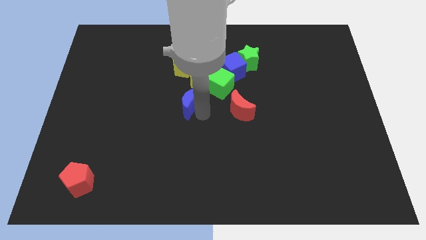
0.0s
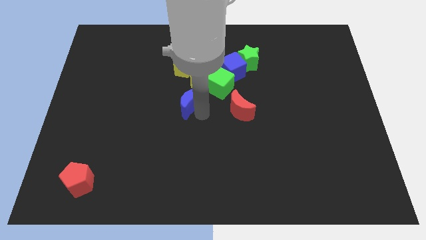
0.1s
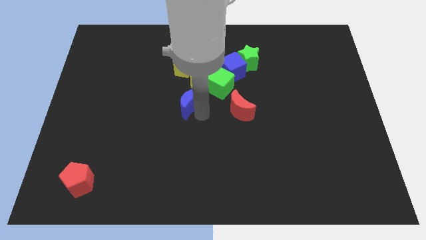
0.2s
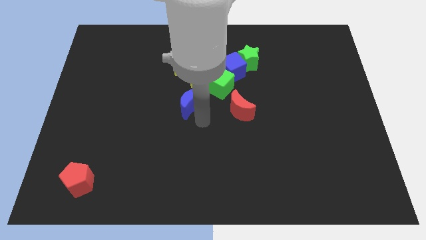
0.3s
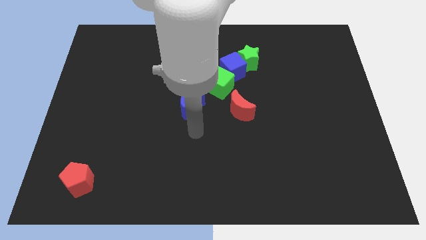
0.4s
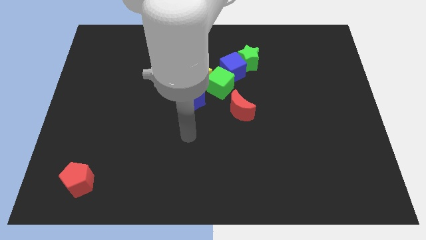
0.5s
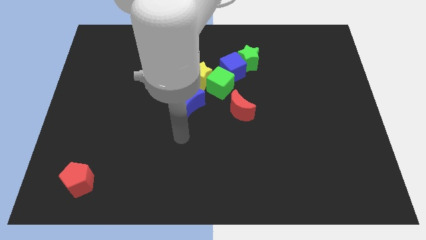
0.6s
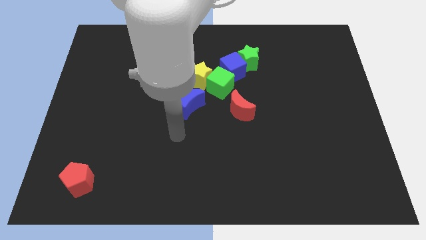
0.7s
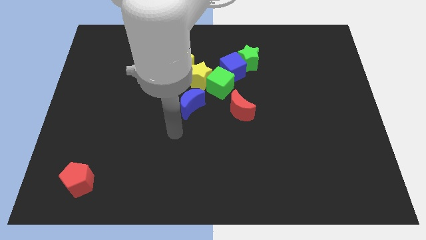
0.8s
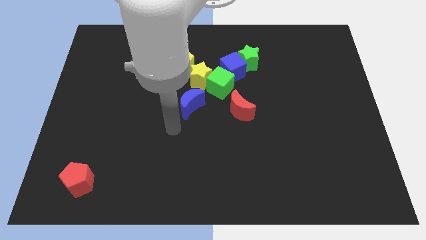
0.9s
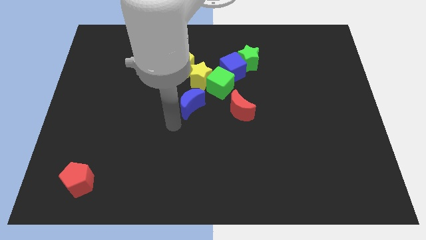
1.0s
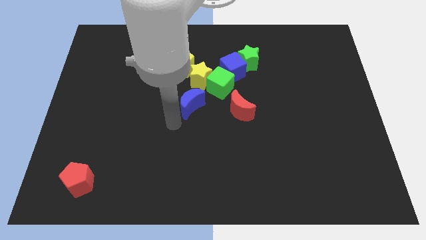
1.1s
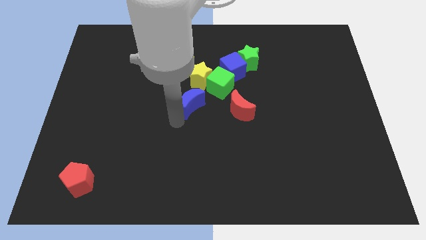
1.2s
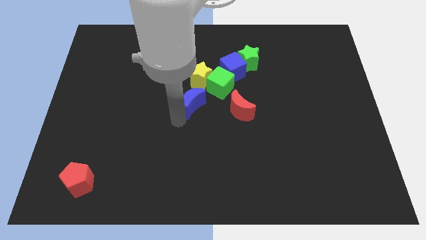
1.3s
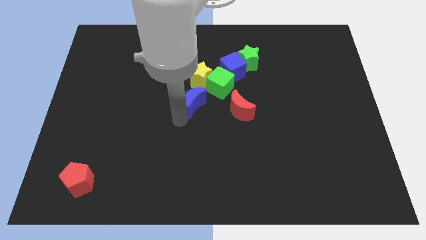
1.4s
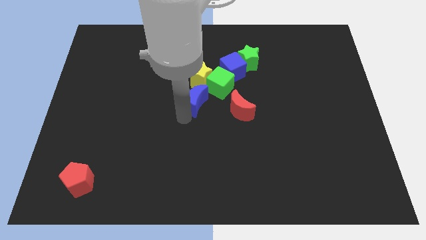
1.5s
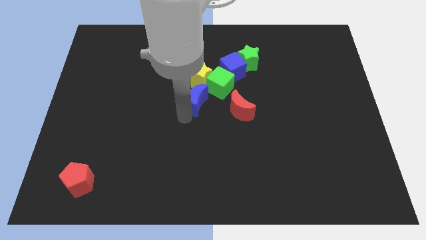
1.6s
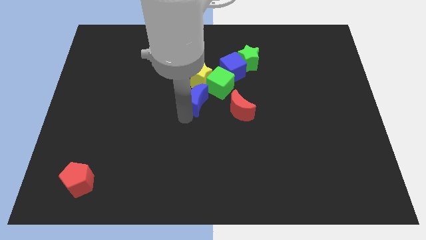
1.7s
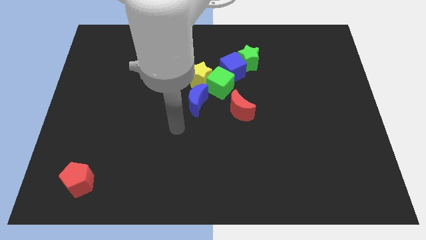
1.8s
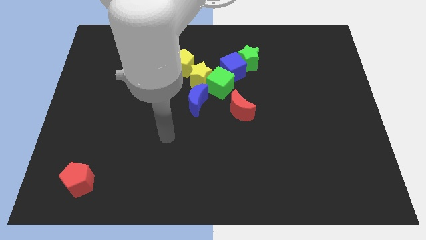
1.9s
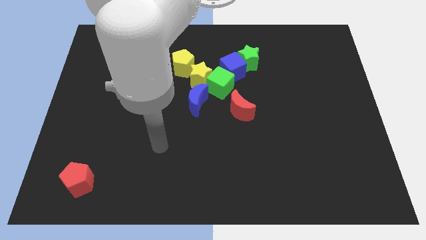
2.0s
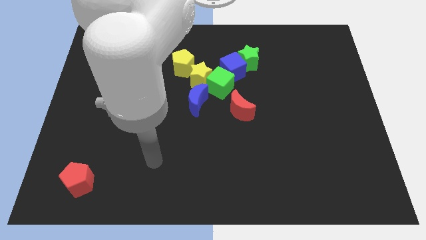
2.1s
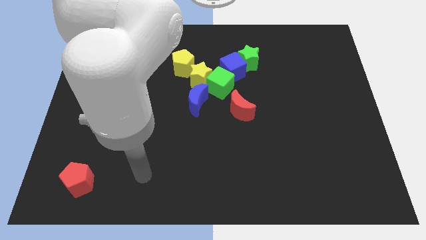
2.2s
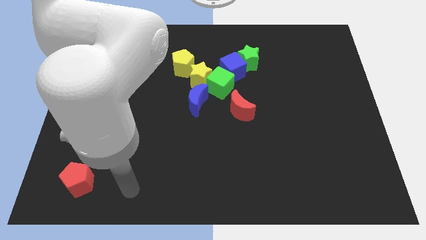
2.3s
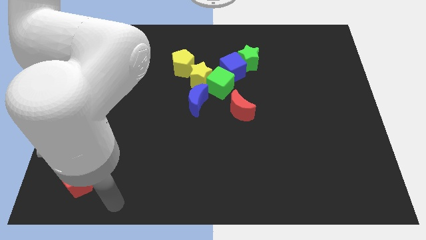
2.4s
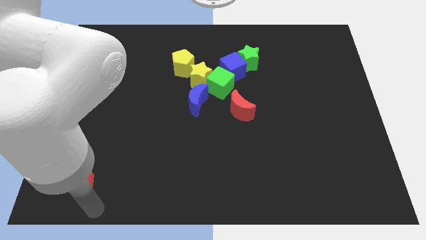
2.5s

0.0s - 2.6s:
place the blue crescent into the left bottom side of the green cube

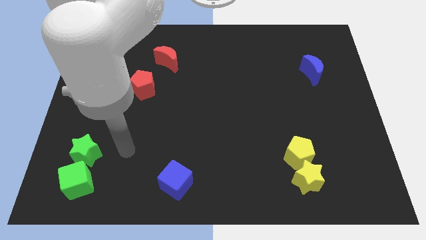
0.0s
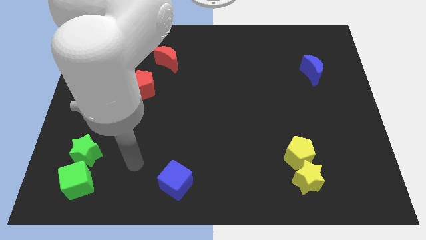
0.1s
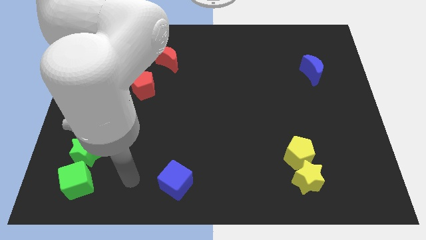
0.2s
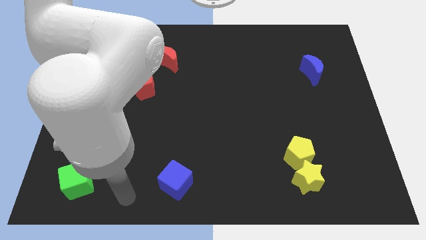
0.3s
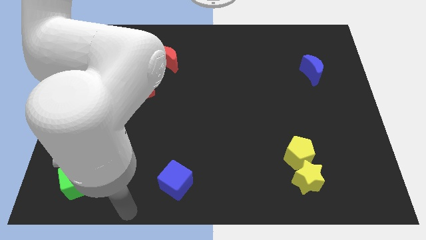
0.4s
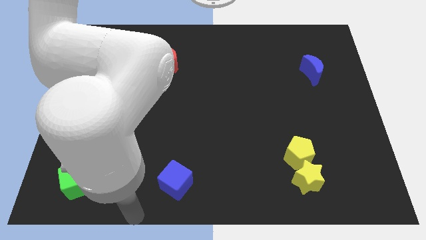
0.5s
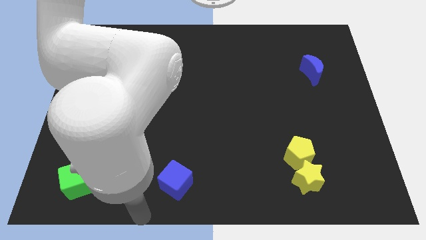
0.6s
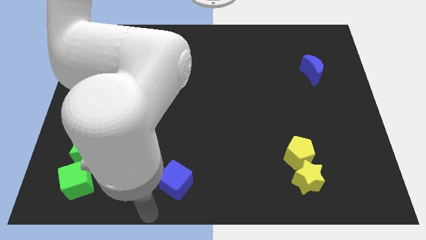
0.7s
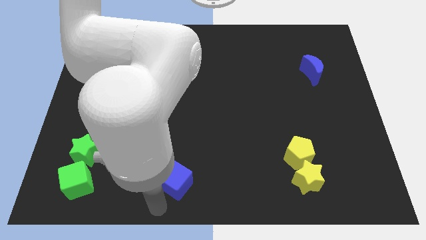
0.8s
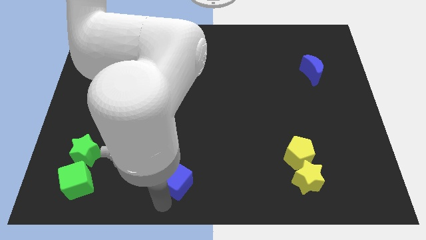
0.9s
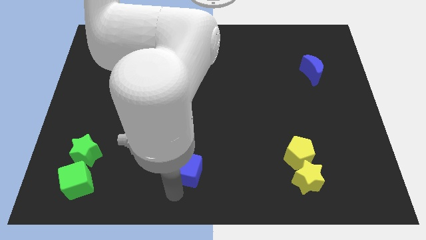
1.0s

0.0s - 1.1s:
touch the bottom of blue cube

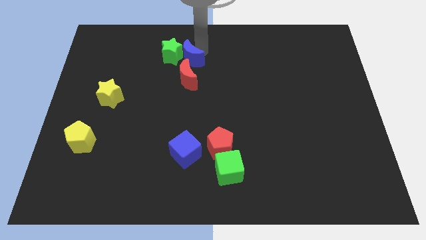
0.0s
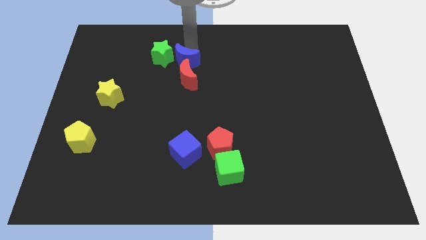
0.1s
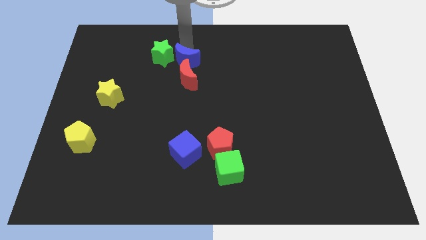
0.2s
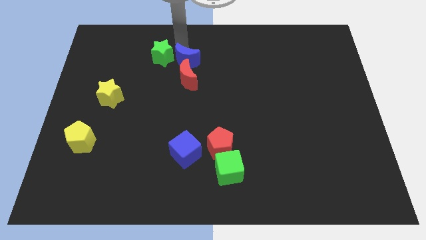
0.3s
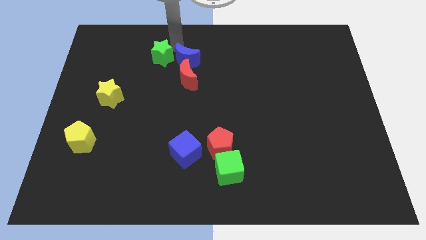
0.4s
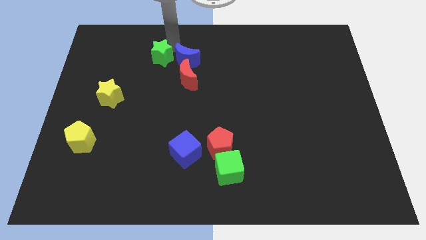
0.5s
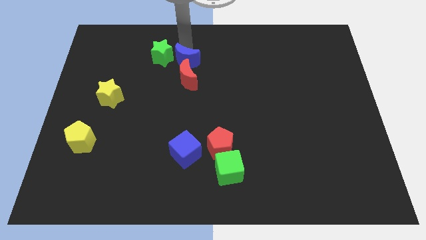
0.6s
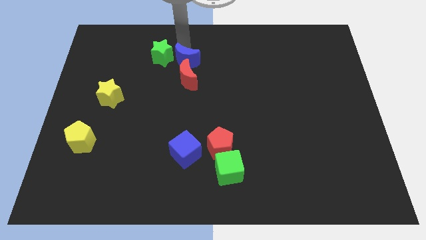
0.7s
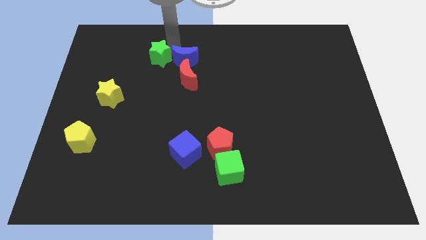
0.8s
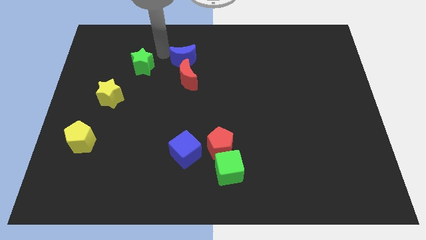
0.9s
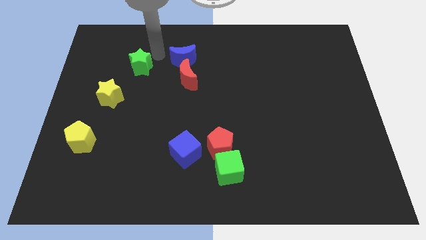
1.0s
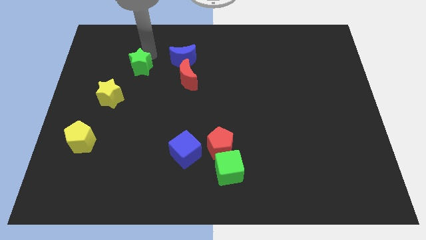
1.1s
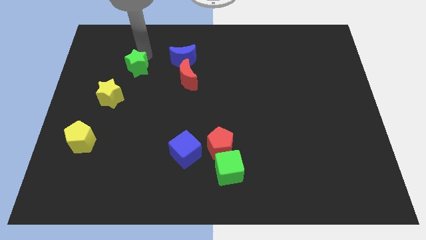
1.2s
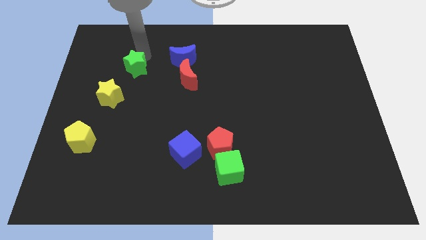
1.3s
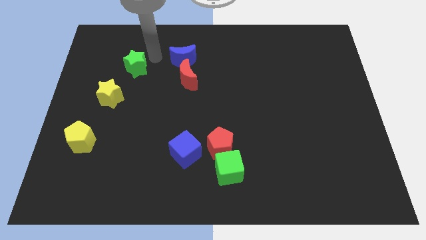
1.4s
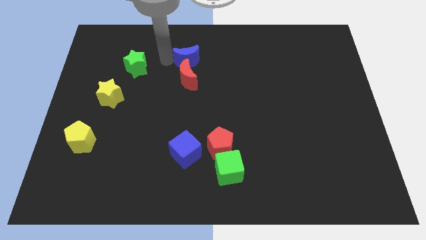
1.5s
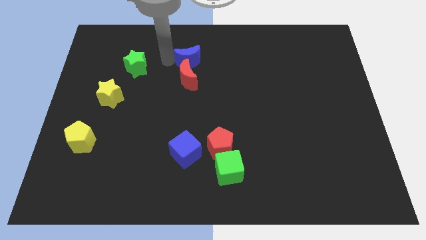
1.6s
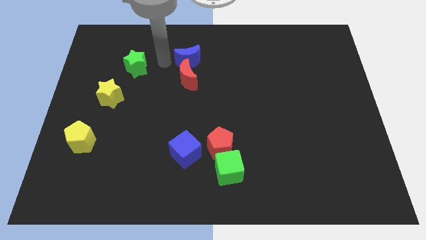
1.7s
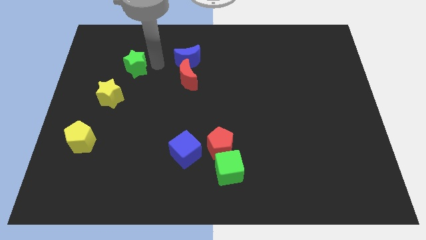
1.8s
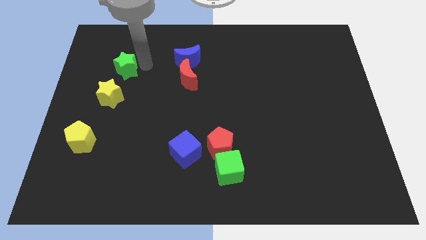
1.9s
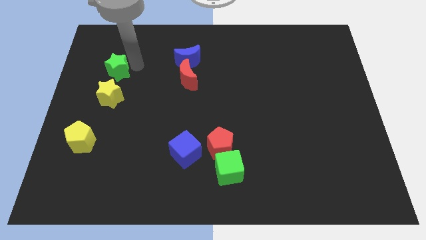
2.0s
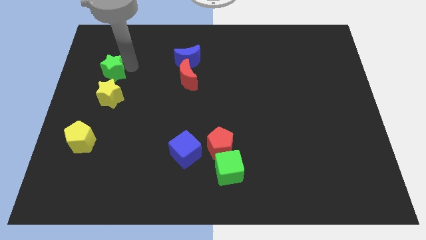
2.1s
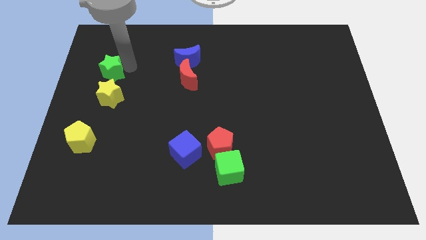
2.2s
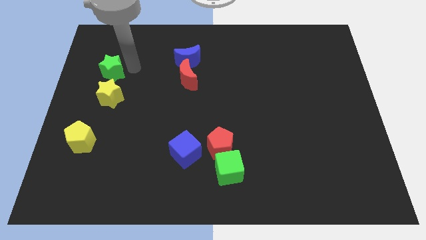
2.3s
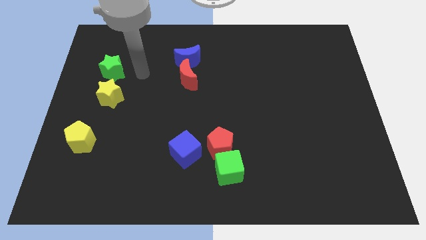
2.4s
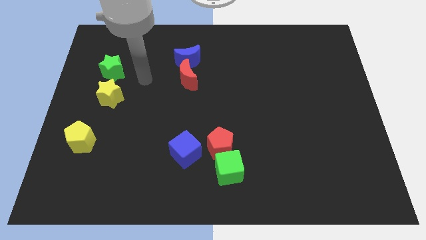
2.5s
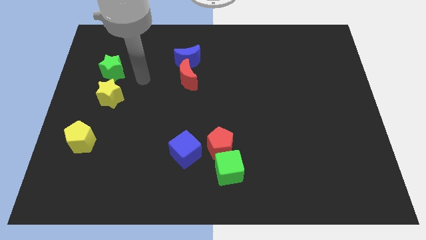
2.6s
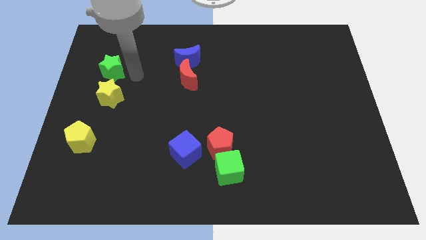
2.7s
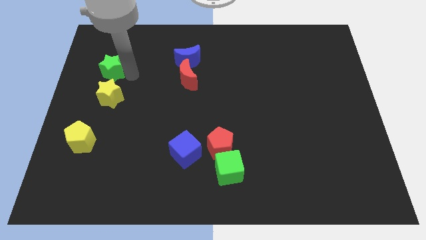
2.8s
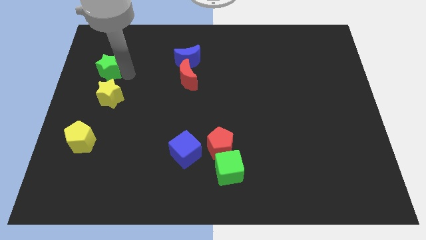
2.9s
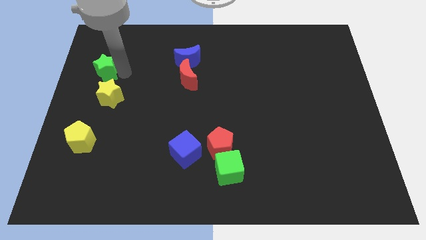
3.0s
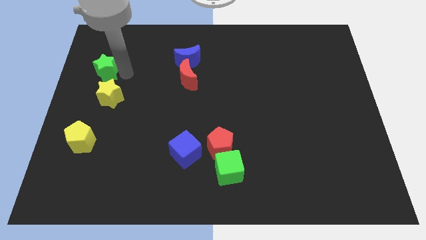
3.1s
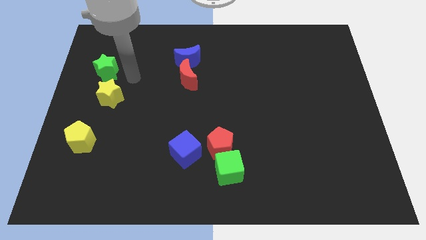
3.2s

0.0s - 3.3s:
move the green star above the yellow star

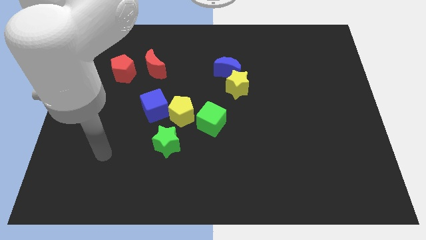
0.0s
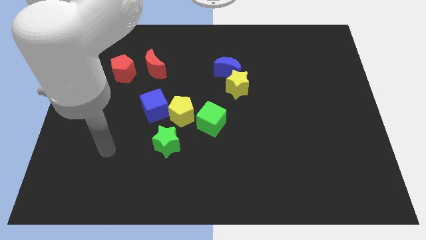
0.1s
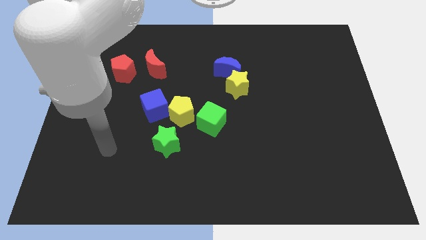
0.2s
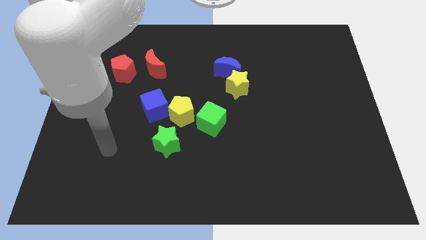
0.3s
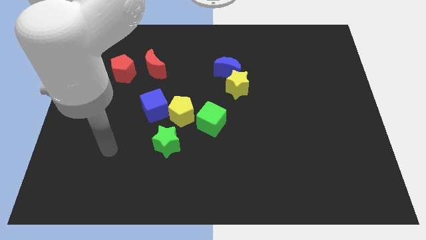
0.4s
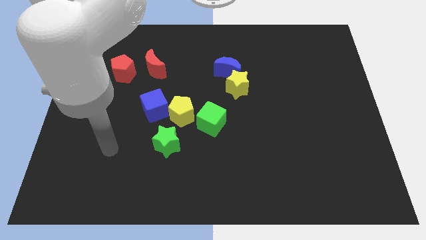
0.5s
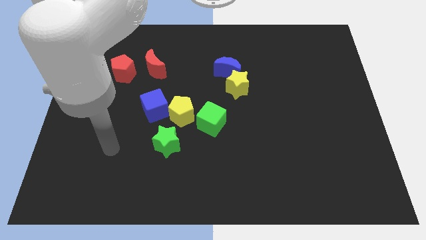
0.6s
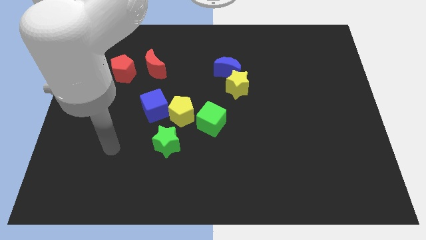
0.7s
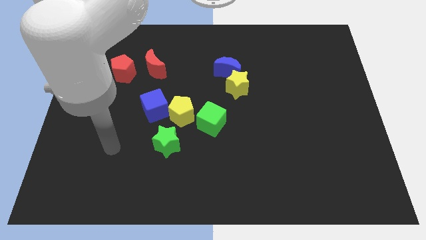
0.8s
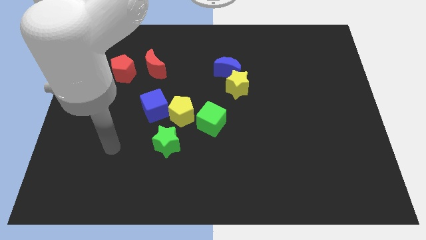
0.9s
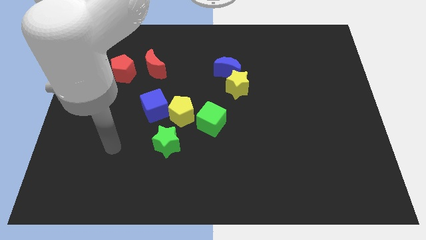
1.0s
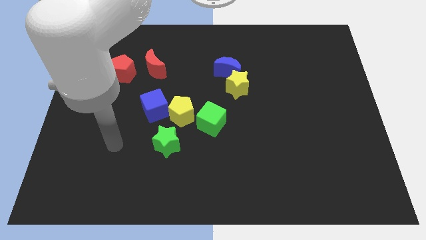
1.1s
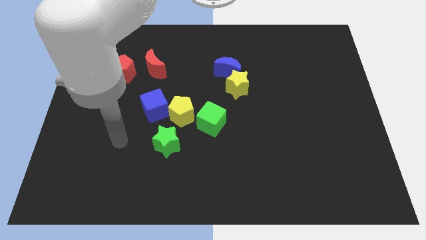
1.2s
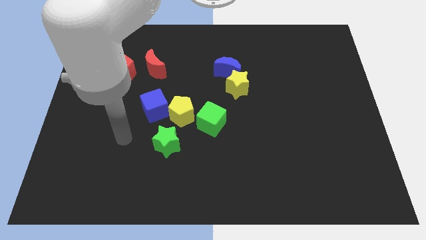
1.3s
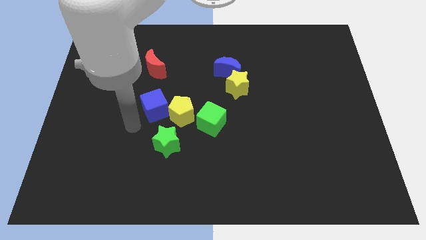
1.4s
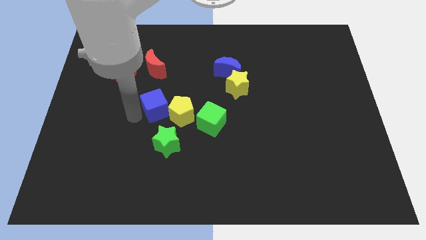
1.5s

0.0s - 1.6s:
move your arm towards the blue cube

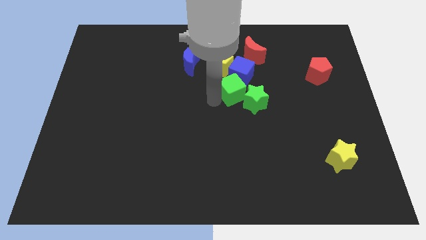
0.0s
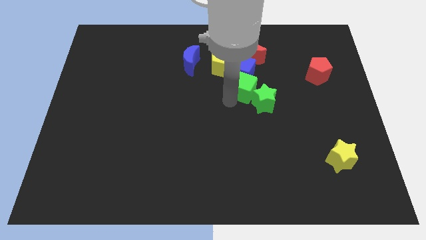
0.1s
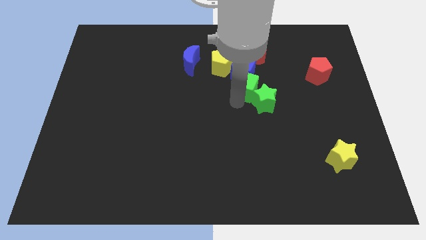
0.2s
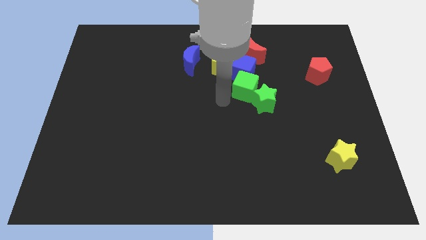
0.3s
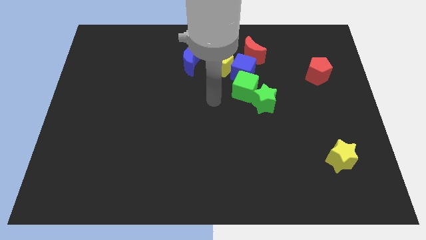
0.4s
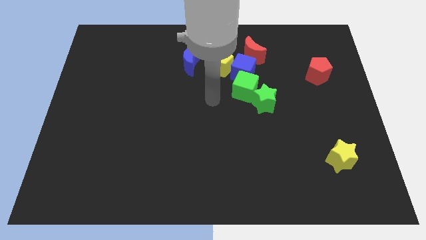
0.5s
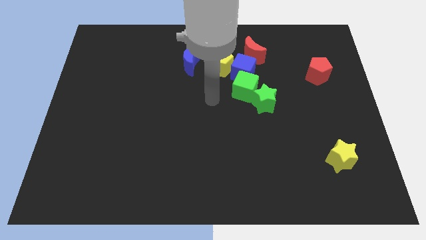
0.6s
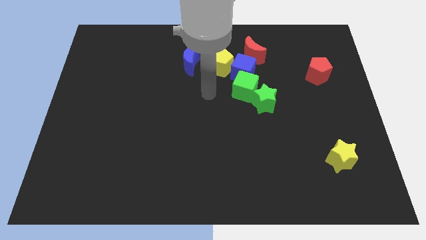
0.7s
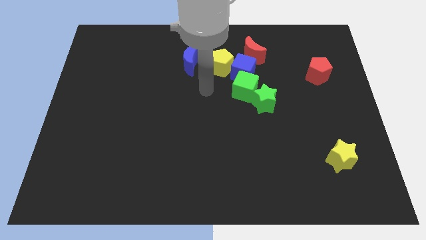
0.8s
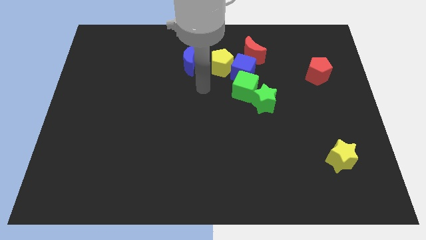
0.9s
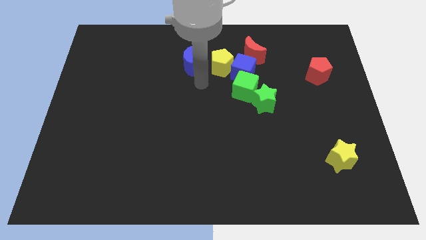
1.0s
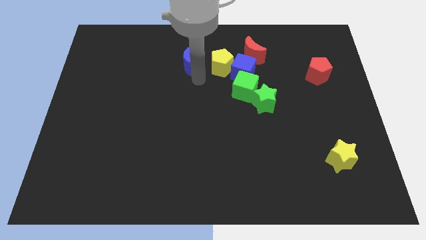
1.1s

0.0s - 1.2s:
move the green cube to the bottom side of the blue cube
